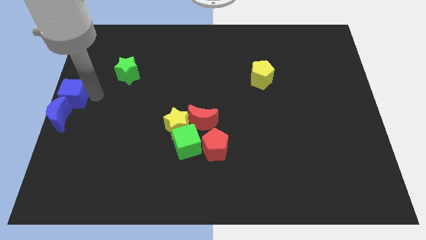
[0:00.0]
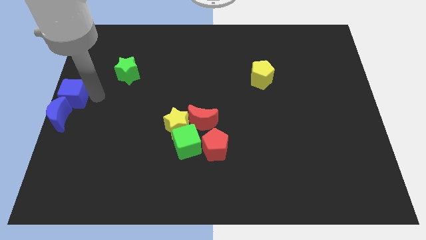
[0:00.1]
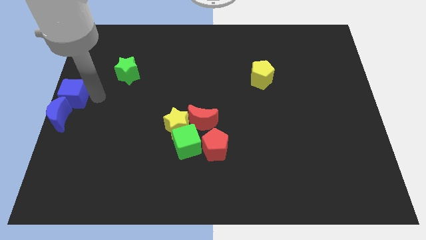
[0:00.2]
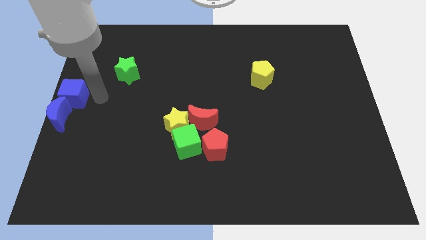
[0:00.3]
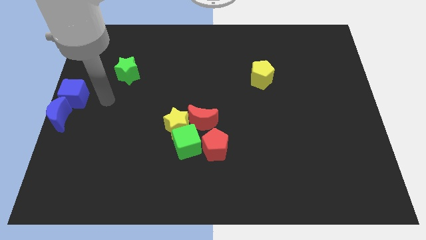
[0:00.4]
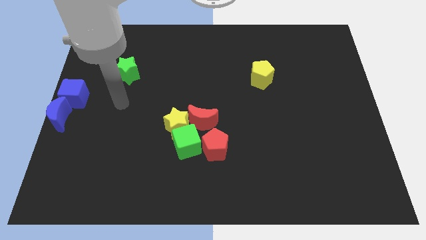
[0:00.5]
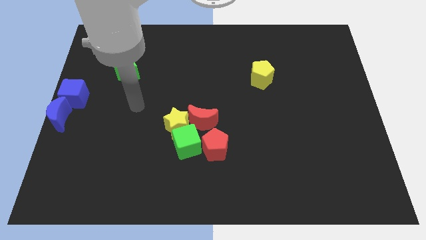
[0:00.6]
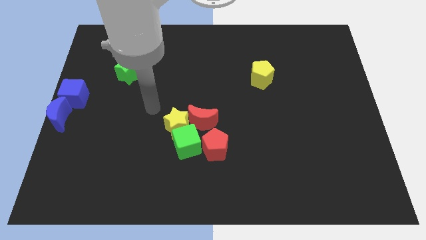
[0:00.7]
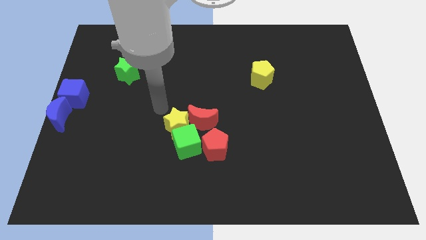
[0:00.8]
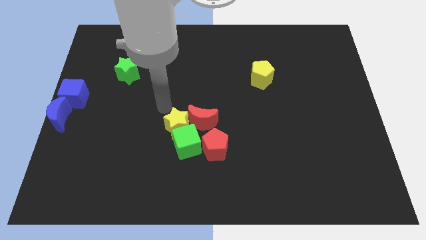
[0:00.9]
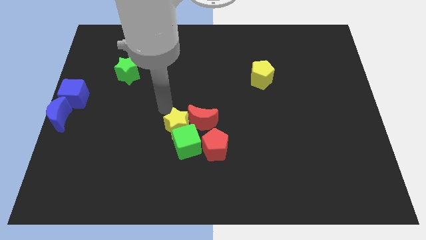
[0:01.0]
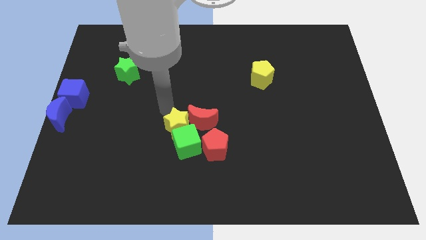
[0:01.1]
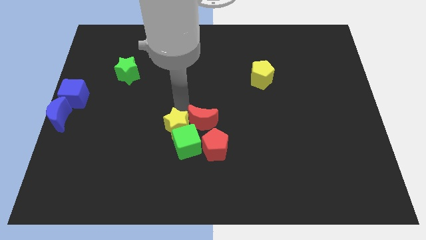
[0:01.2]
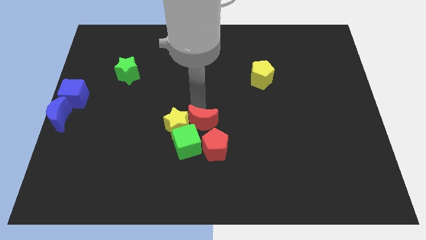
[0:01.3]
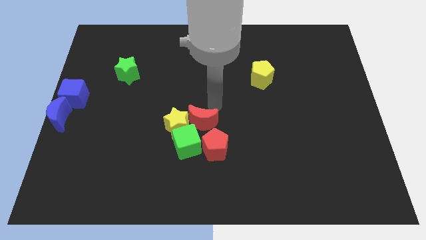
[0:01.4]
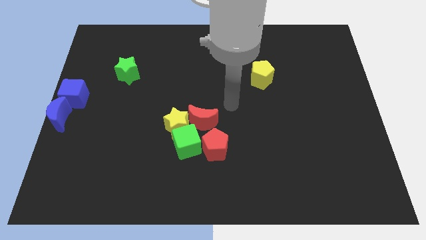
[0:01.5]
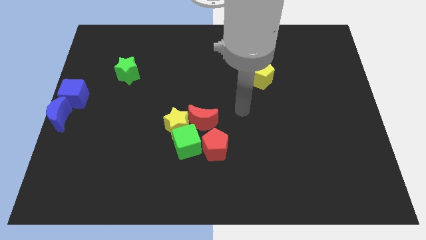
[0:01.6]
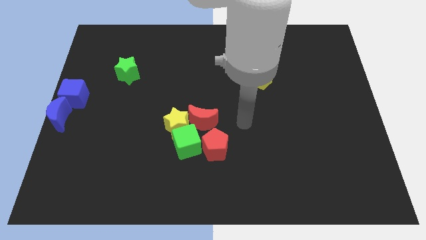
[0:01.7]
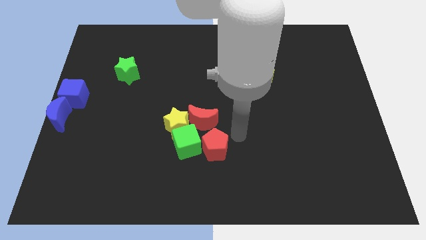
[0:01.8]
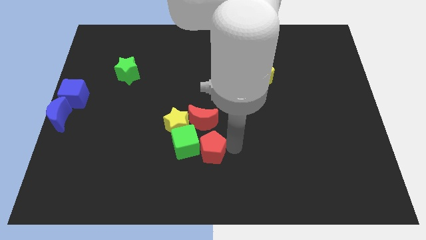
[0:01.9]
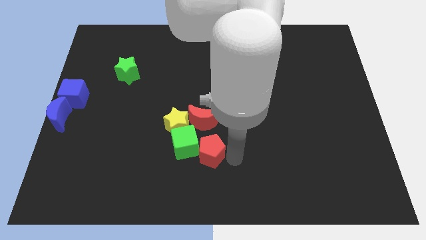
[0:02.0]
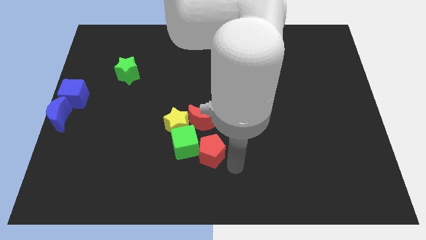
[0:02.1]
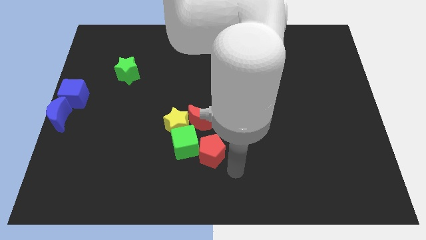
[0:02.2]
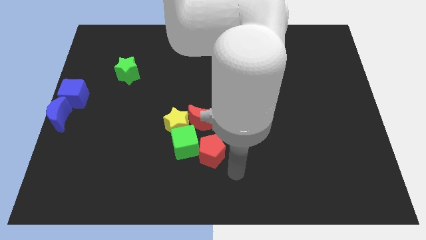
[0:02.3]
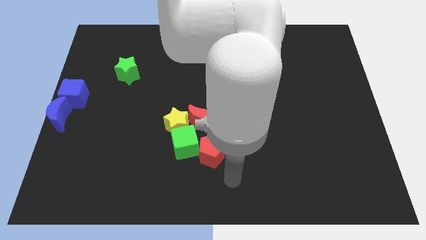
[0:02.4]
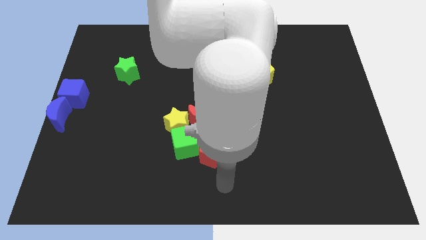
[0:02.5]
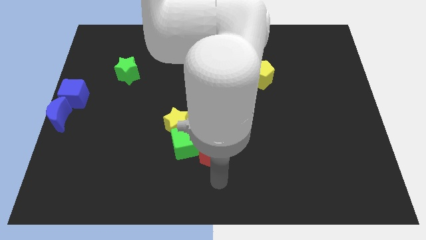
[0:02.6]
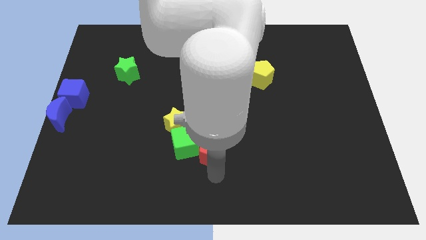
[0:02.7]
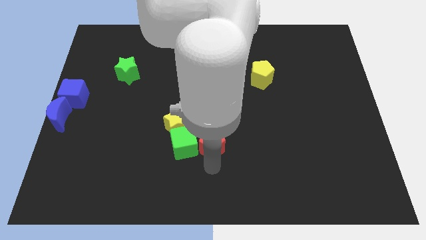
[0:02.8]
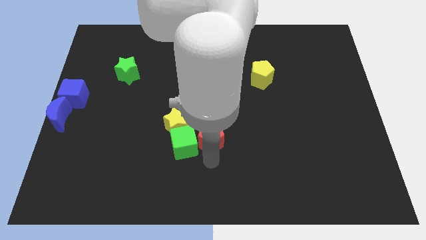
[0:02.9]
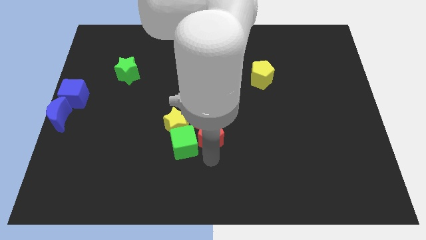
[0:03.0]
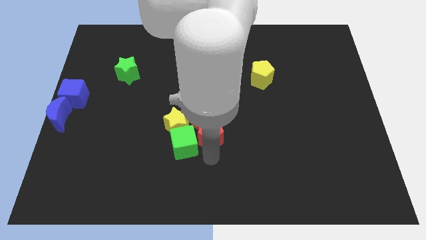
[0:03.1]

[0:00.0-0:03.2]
slide red pentagon close to red moon

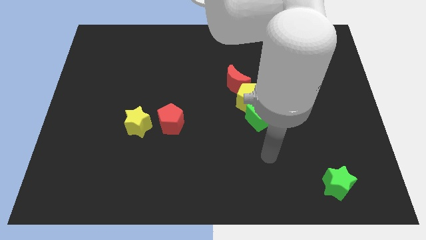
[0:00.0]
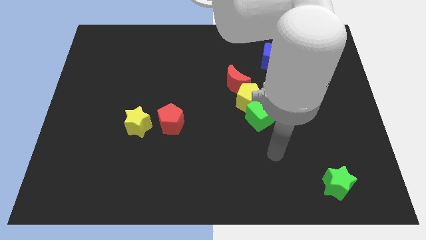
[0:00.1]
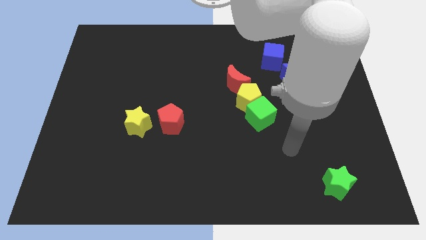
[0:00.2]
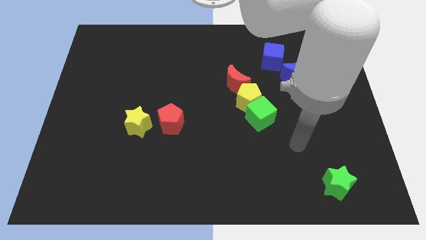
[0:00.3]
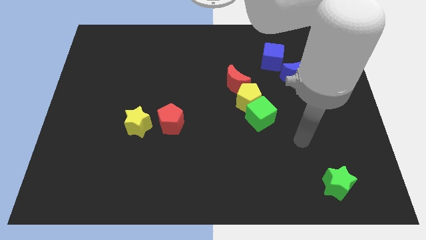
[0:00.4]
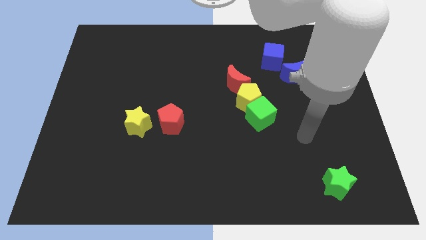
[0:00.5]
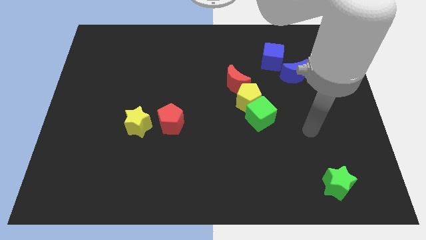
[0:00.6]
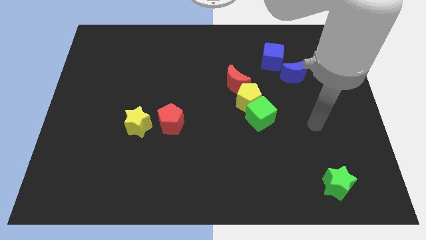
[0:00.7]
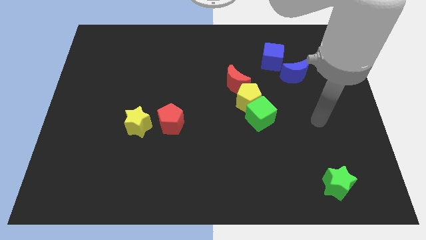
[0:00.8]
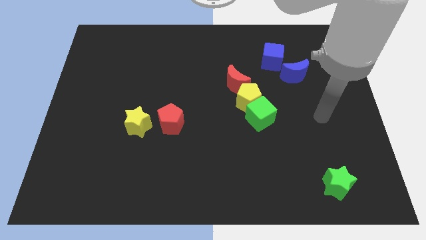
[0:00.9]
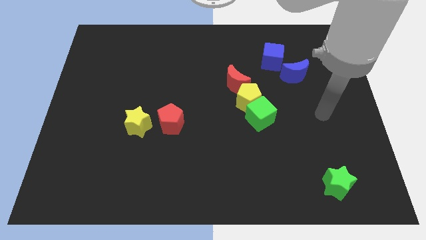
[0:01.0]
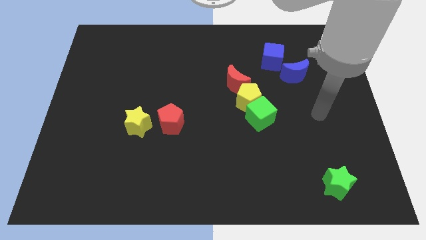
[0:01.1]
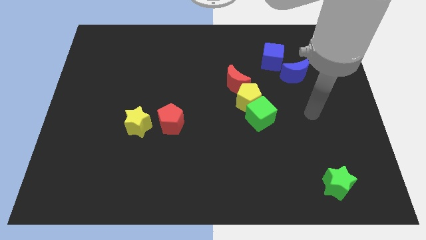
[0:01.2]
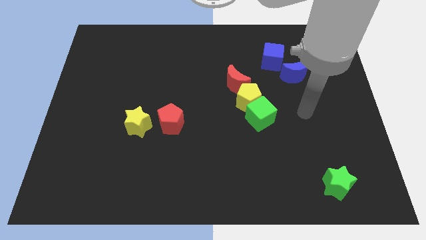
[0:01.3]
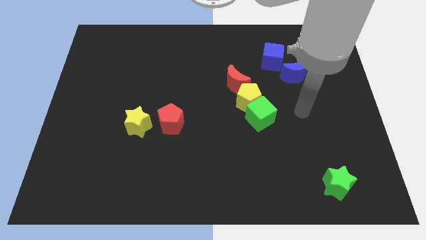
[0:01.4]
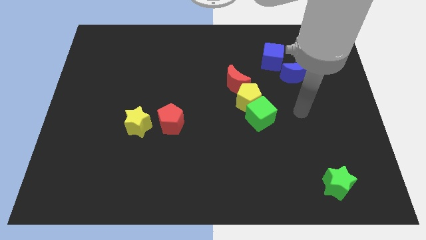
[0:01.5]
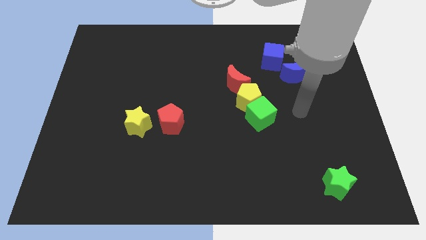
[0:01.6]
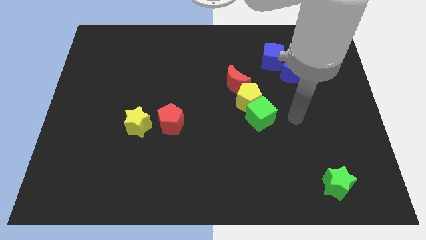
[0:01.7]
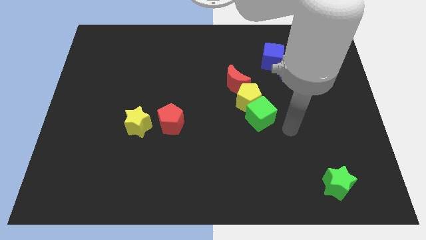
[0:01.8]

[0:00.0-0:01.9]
point your arm at the right of the green cube

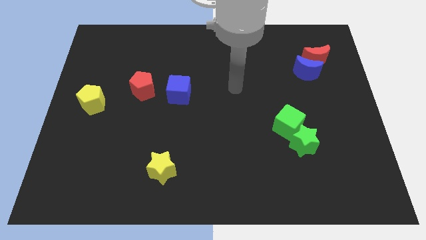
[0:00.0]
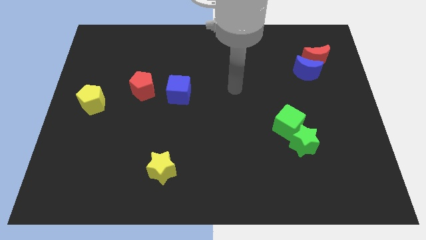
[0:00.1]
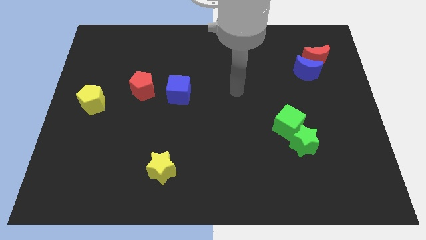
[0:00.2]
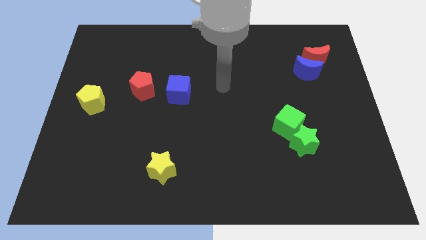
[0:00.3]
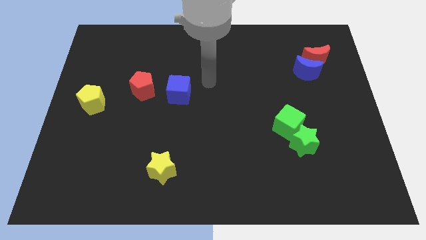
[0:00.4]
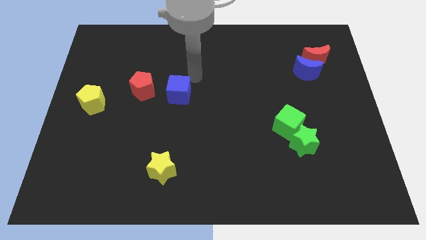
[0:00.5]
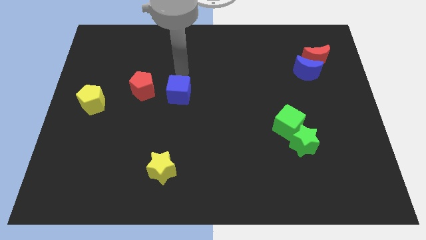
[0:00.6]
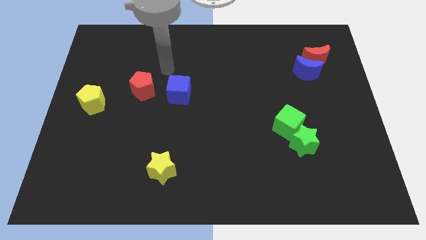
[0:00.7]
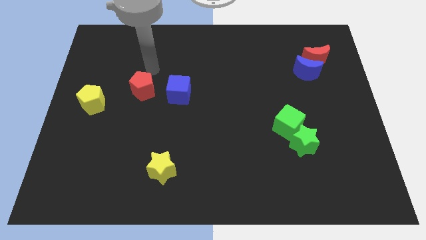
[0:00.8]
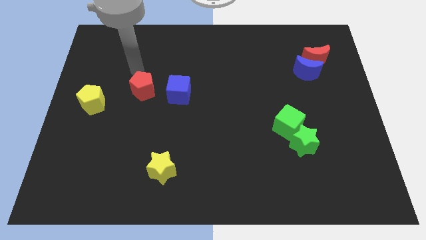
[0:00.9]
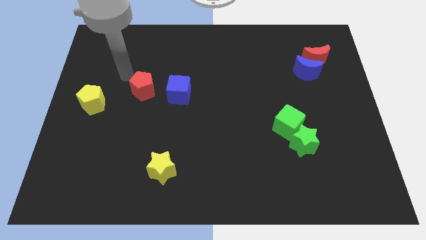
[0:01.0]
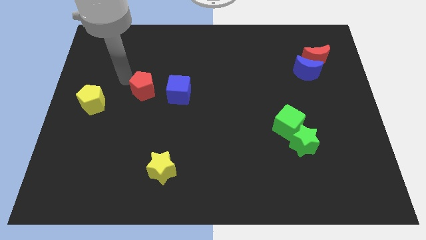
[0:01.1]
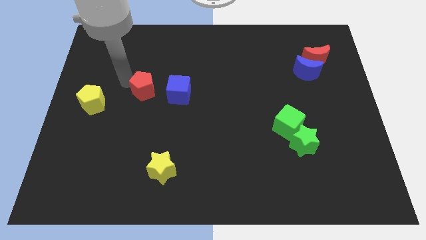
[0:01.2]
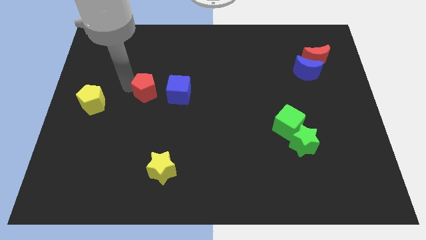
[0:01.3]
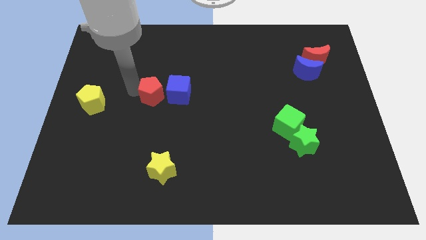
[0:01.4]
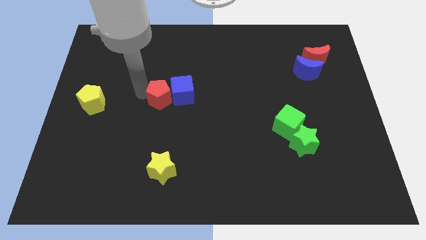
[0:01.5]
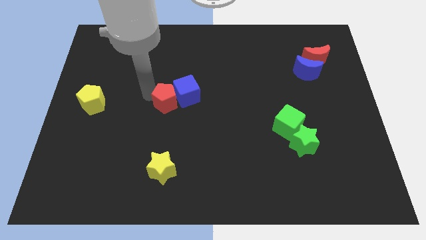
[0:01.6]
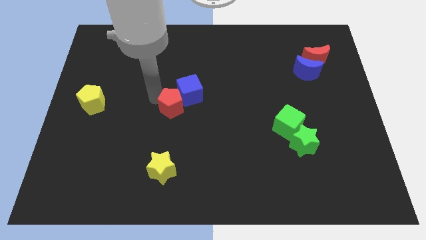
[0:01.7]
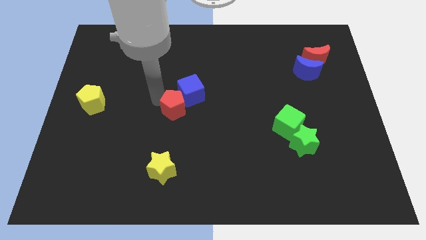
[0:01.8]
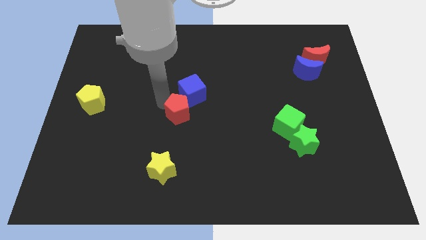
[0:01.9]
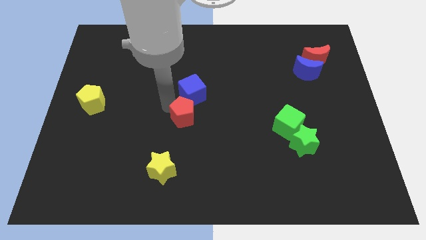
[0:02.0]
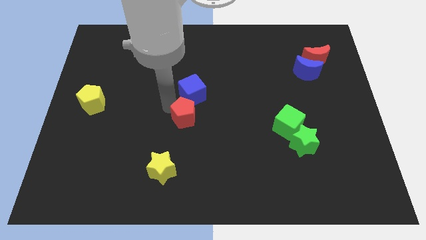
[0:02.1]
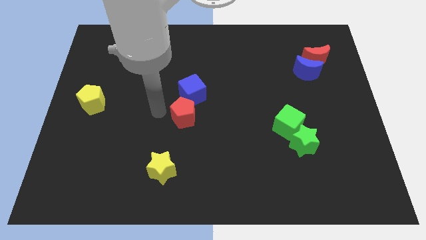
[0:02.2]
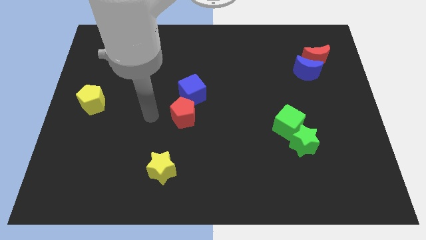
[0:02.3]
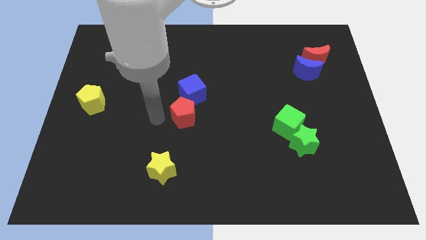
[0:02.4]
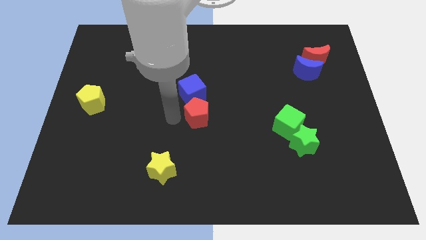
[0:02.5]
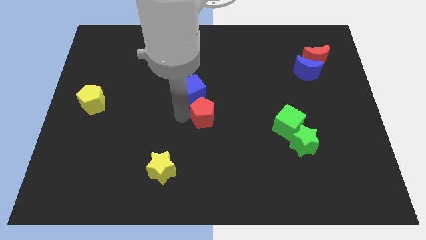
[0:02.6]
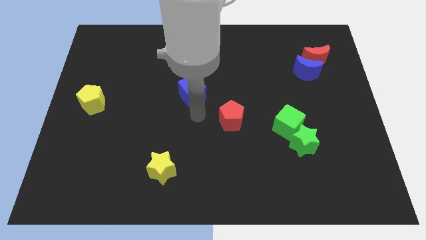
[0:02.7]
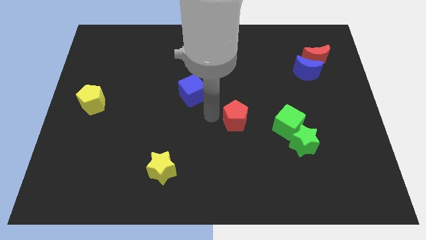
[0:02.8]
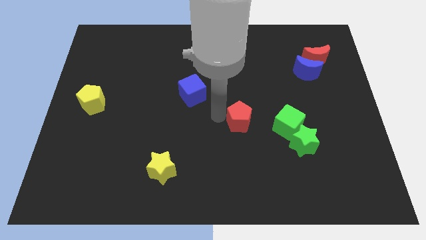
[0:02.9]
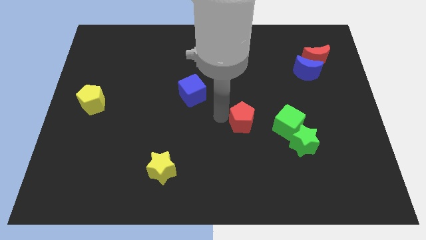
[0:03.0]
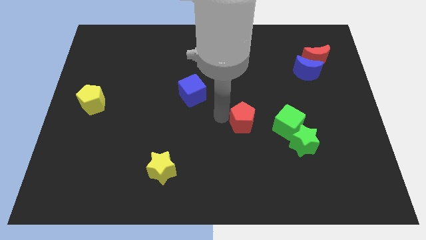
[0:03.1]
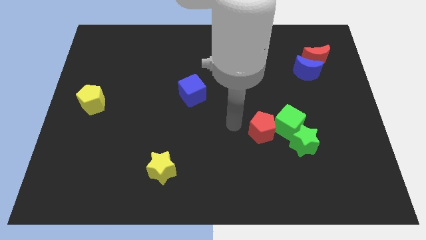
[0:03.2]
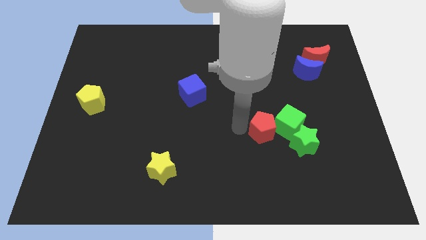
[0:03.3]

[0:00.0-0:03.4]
push the red pentagon to the left of the green cube

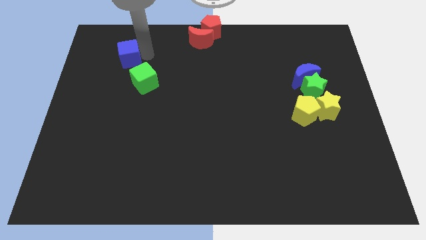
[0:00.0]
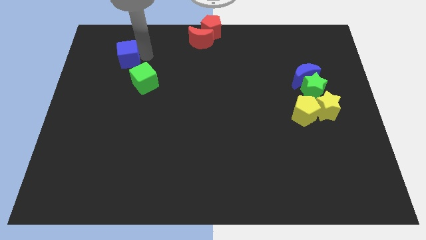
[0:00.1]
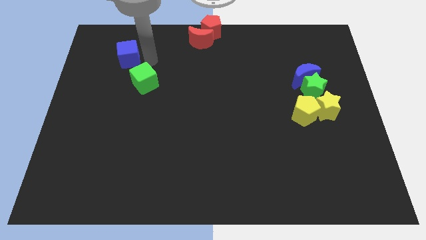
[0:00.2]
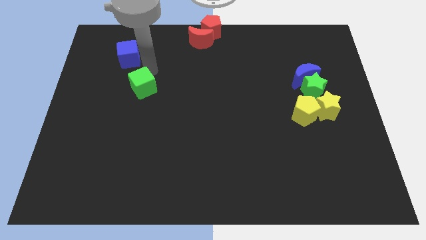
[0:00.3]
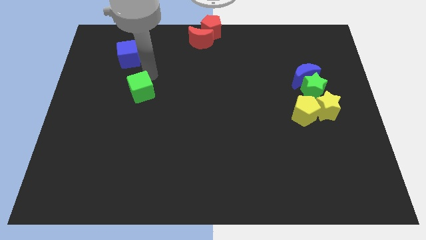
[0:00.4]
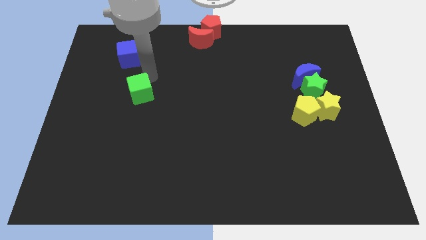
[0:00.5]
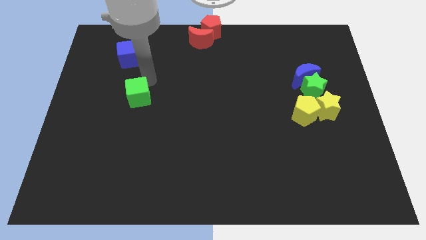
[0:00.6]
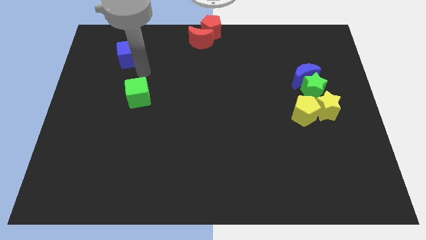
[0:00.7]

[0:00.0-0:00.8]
slightly touch right to the green cube
